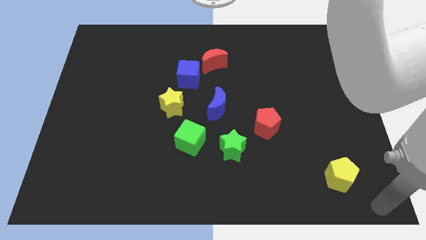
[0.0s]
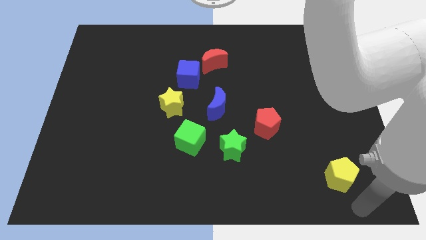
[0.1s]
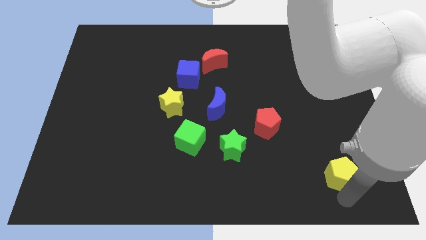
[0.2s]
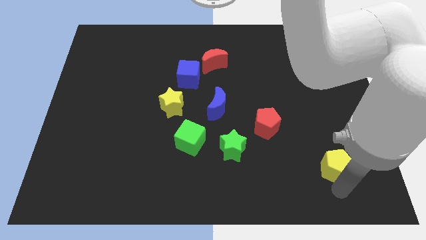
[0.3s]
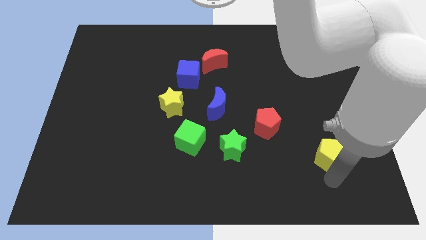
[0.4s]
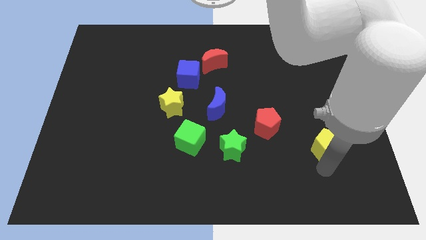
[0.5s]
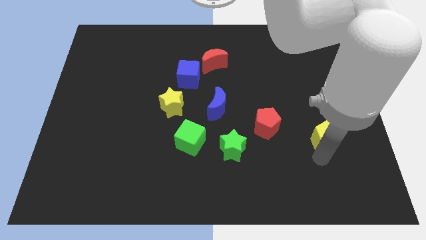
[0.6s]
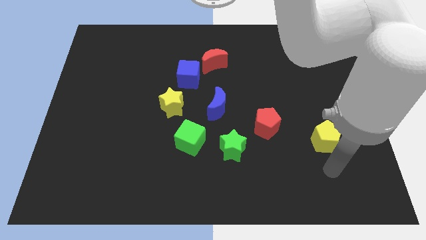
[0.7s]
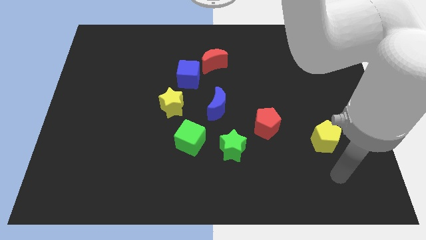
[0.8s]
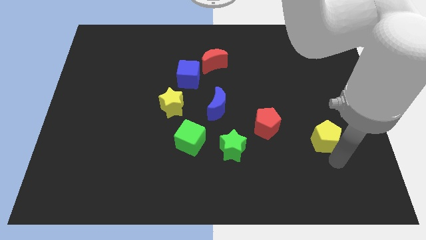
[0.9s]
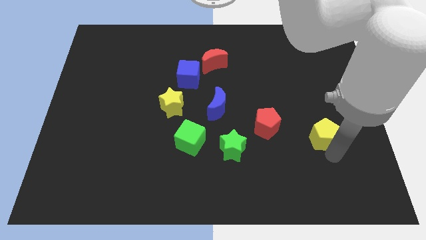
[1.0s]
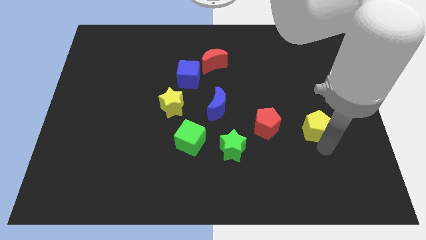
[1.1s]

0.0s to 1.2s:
place the yellow pentagon parallel to the red pentagon

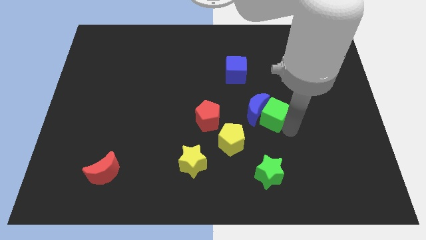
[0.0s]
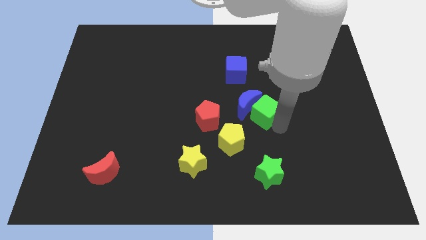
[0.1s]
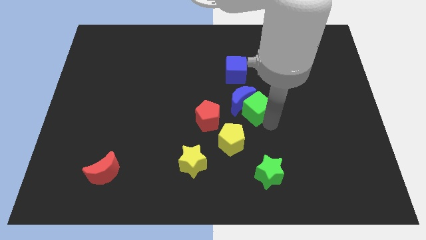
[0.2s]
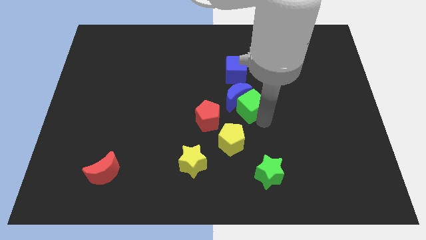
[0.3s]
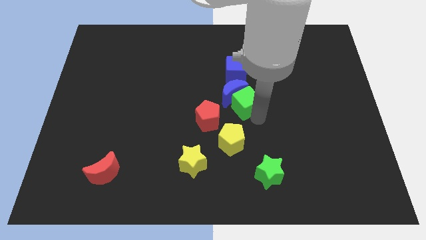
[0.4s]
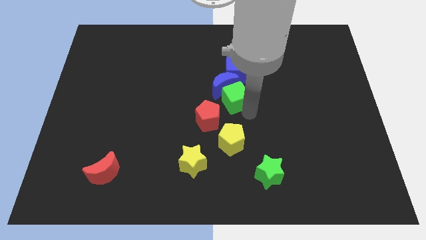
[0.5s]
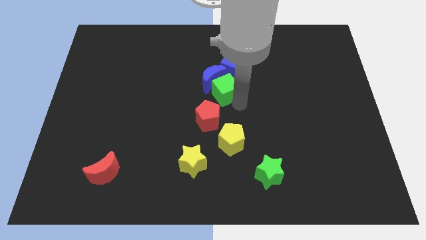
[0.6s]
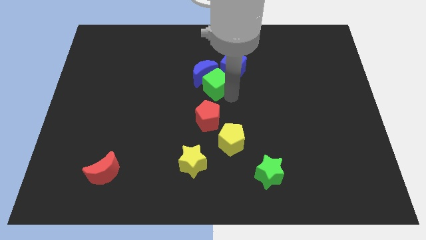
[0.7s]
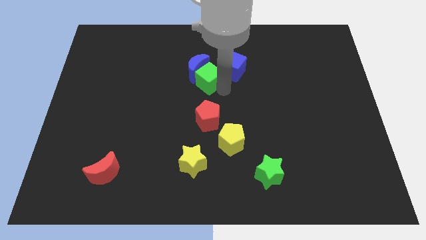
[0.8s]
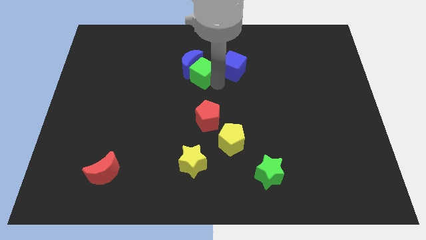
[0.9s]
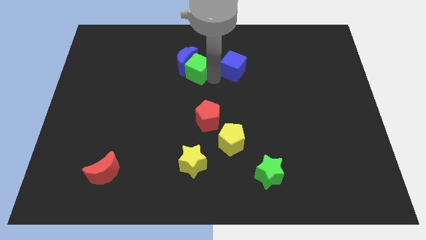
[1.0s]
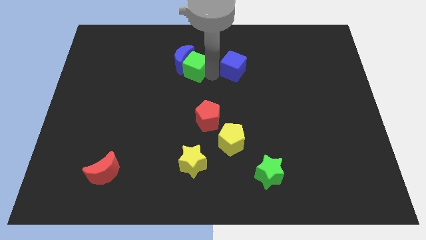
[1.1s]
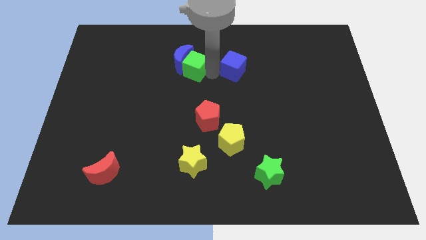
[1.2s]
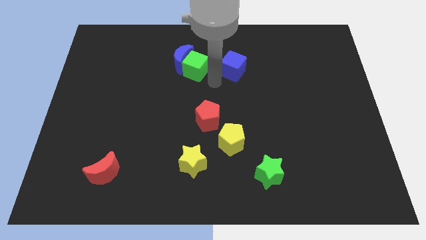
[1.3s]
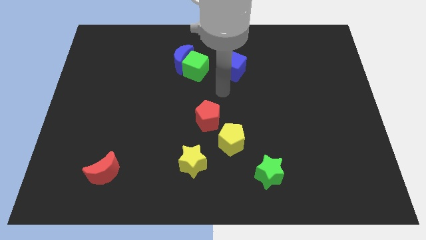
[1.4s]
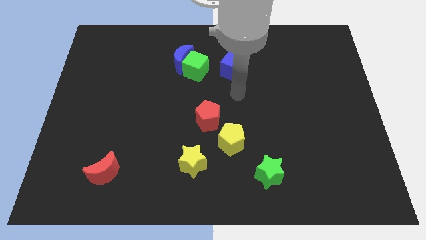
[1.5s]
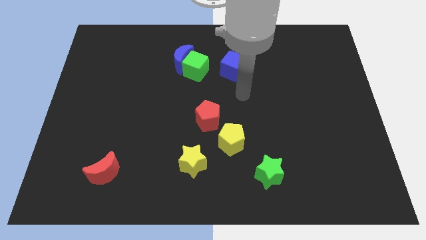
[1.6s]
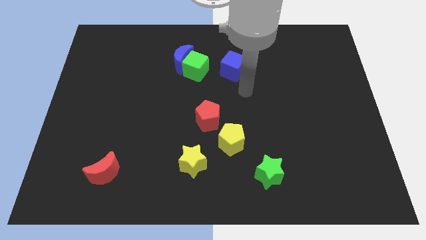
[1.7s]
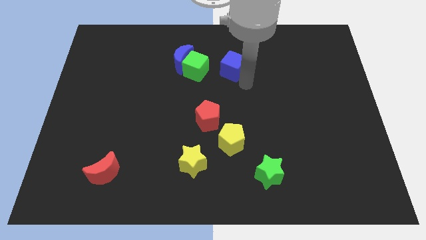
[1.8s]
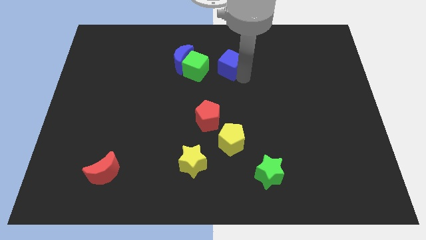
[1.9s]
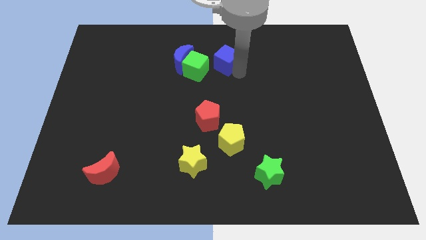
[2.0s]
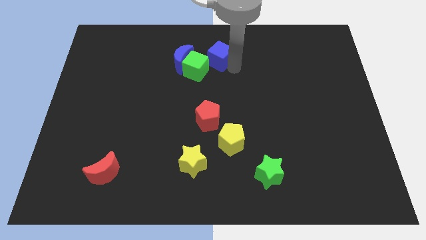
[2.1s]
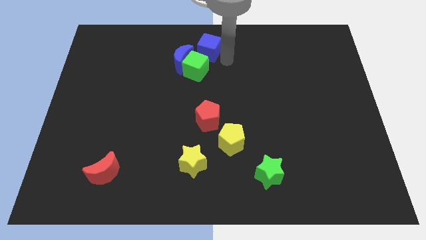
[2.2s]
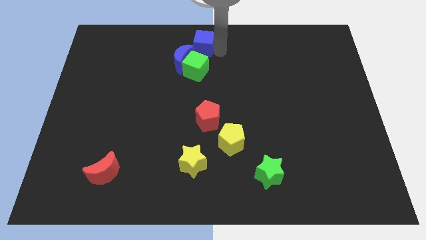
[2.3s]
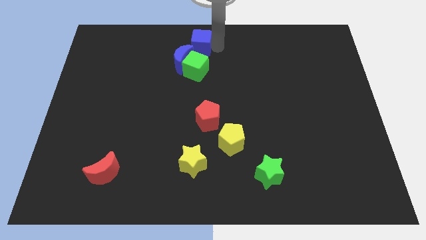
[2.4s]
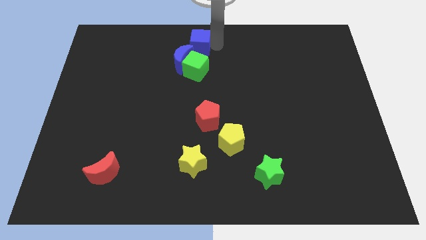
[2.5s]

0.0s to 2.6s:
slide the blue blocks and green cube towards the top side of the board

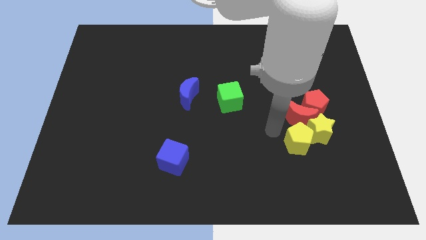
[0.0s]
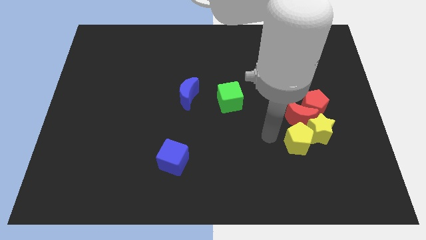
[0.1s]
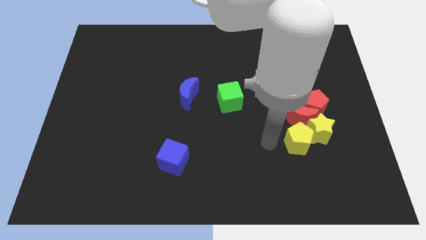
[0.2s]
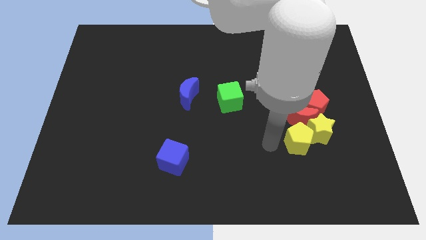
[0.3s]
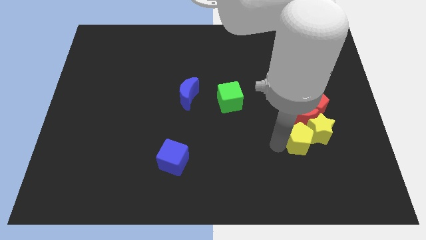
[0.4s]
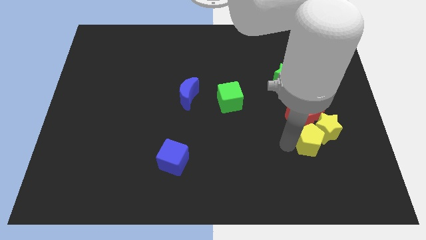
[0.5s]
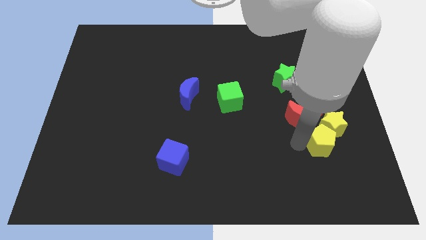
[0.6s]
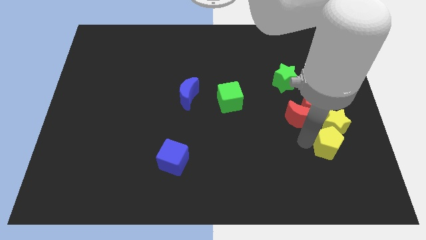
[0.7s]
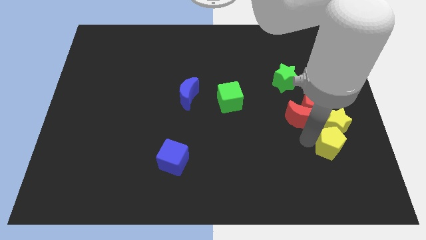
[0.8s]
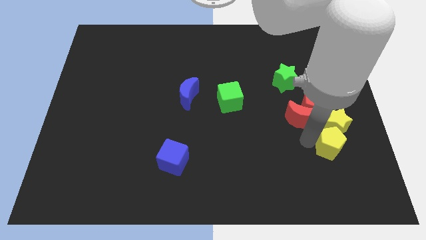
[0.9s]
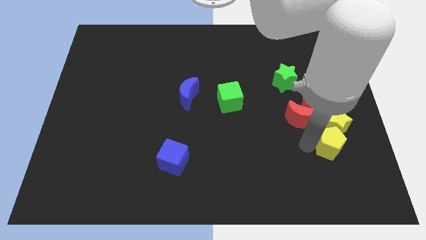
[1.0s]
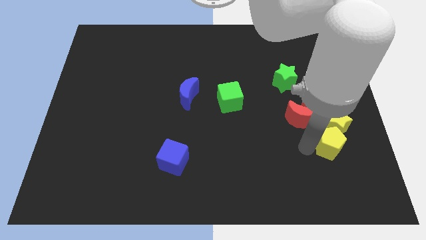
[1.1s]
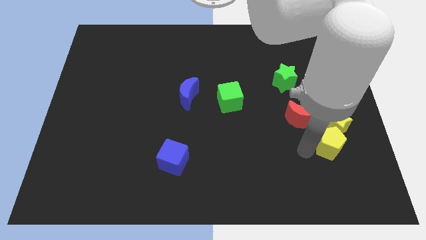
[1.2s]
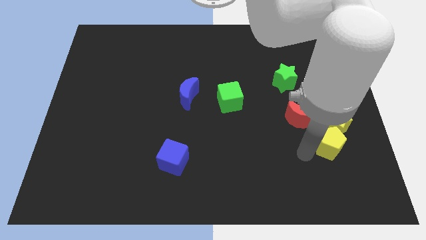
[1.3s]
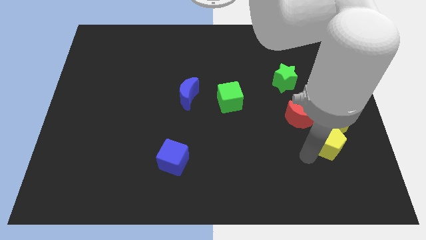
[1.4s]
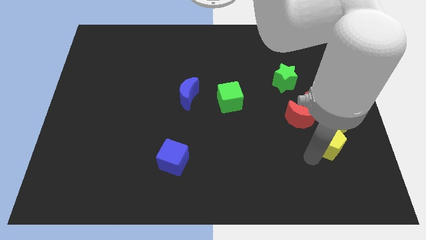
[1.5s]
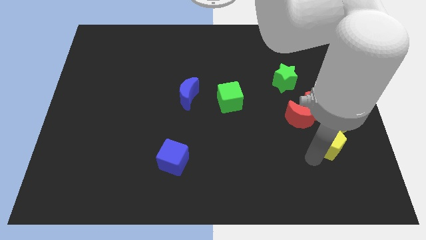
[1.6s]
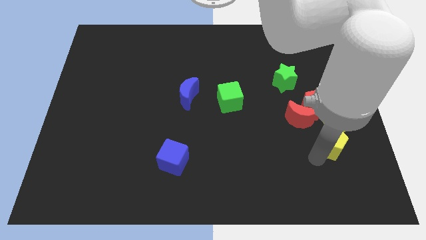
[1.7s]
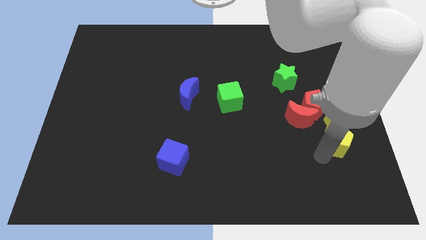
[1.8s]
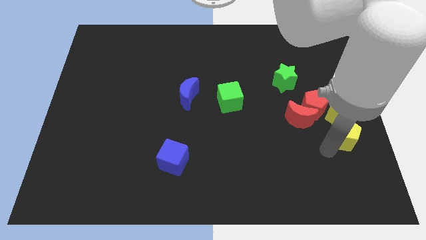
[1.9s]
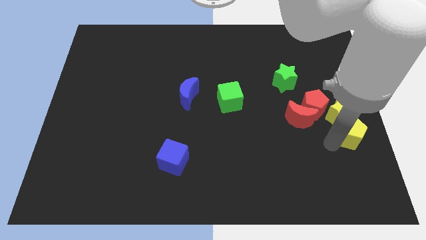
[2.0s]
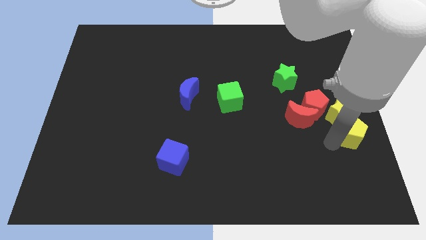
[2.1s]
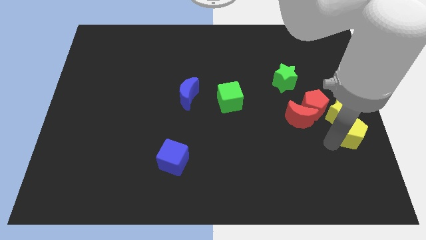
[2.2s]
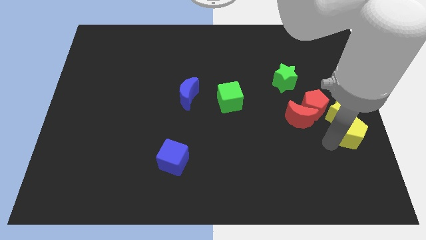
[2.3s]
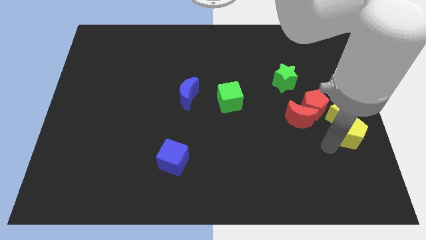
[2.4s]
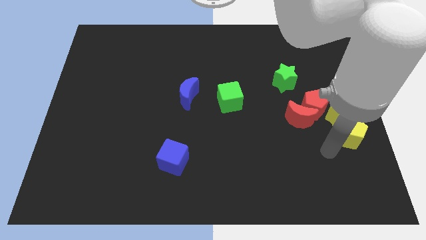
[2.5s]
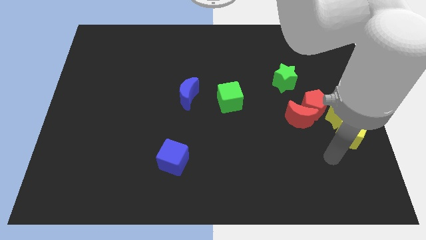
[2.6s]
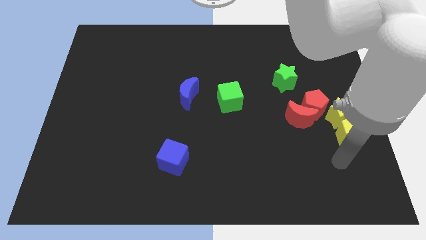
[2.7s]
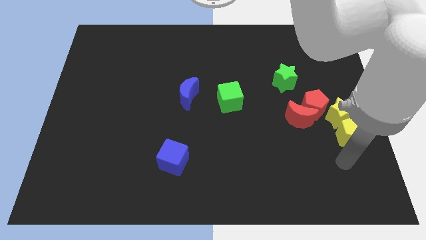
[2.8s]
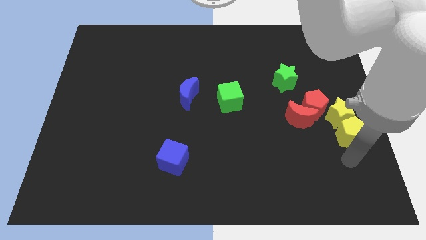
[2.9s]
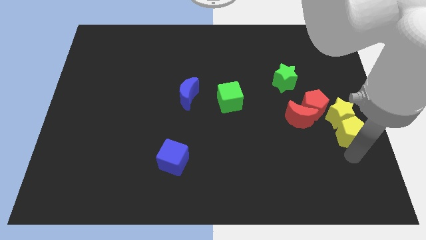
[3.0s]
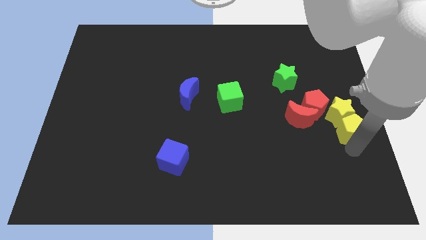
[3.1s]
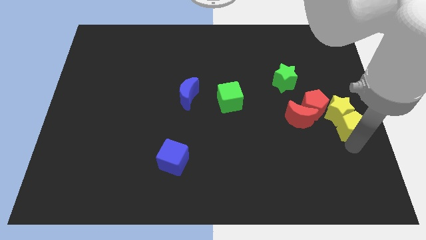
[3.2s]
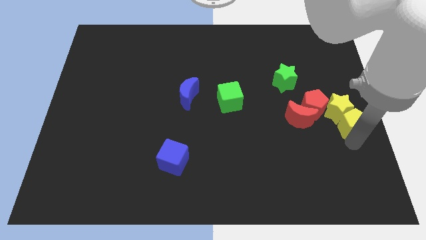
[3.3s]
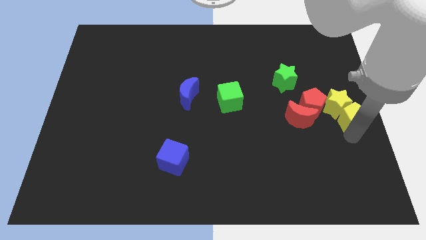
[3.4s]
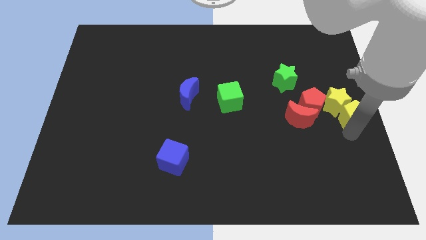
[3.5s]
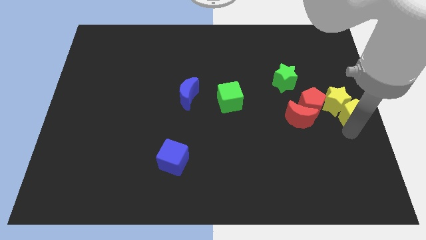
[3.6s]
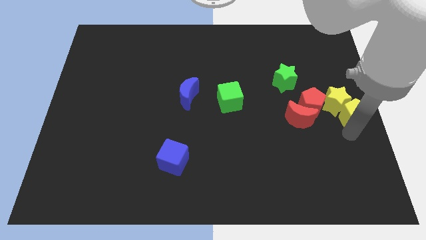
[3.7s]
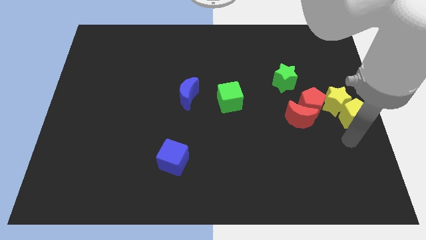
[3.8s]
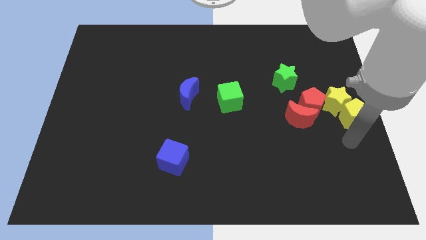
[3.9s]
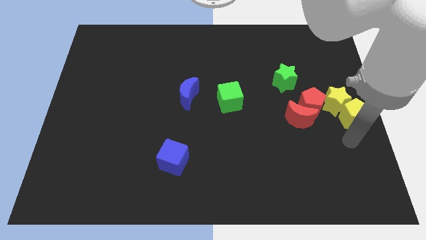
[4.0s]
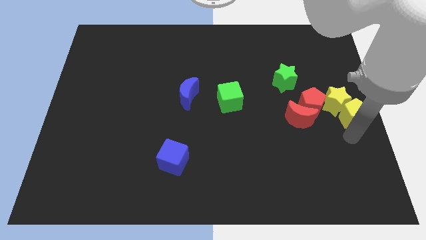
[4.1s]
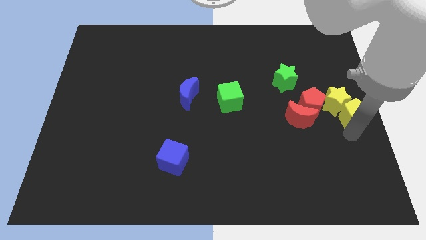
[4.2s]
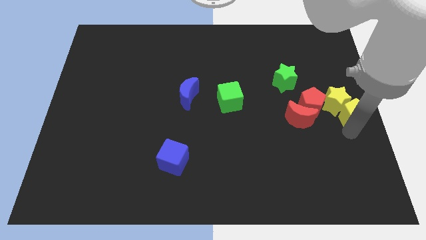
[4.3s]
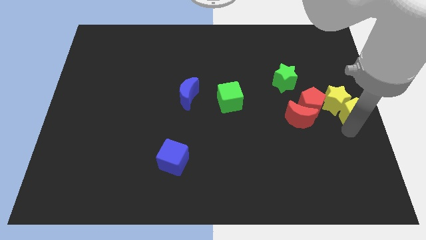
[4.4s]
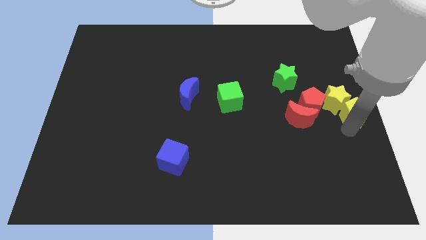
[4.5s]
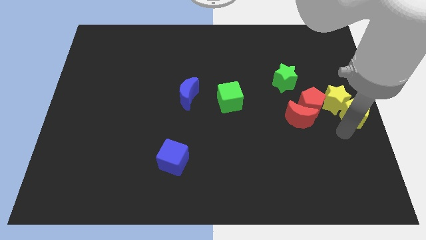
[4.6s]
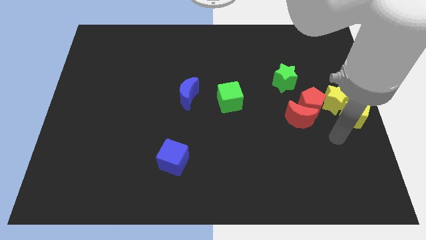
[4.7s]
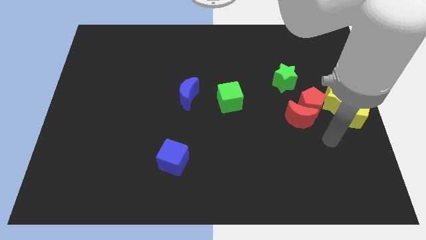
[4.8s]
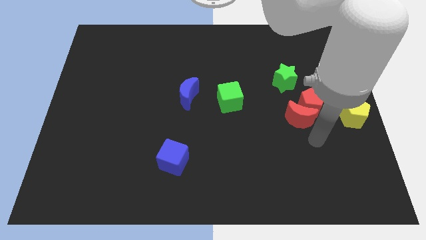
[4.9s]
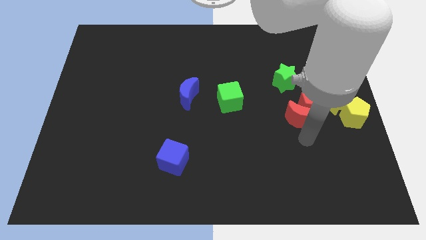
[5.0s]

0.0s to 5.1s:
drag the yellow pentagon along with the yellow star to the center right

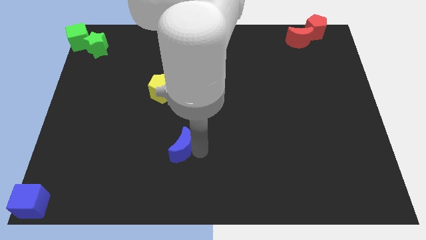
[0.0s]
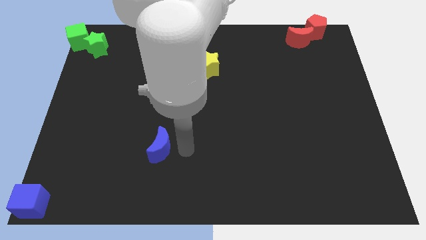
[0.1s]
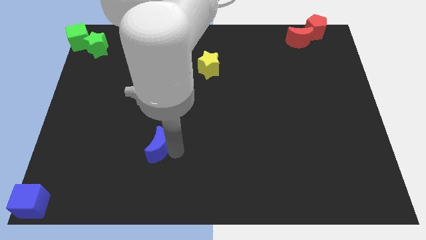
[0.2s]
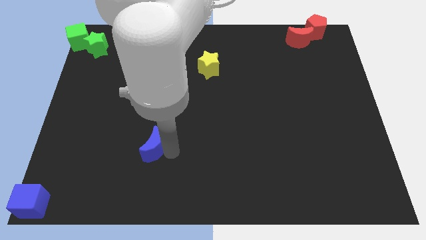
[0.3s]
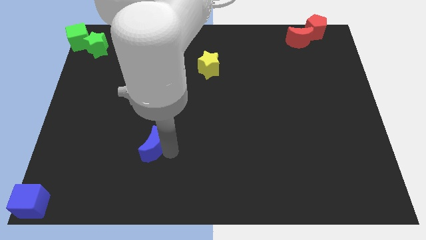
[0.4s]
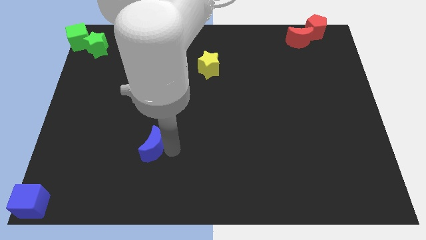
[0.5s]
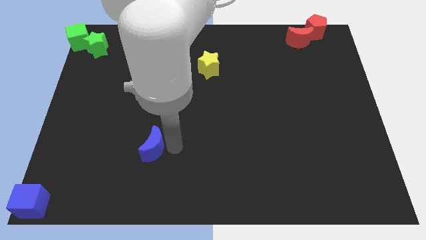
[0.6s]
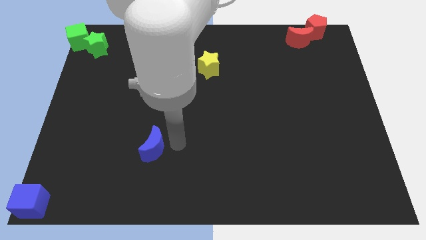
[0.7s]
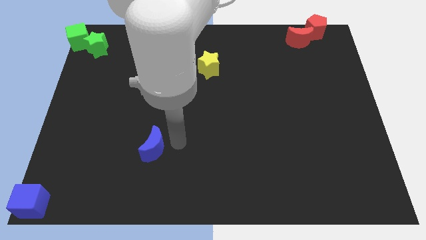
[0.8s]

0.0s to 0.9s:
move the blue crescent towards the blue cube
